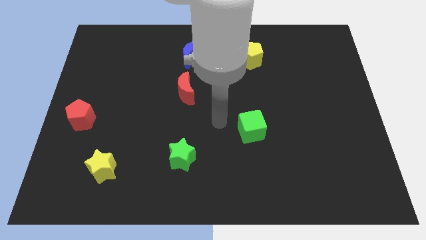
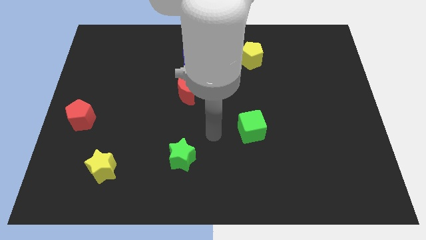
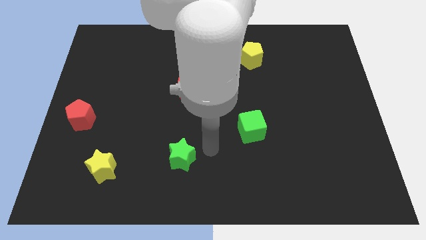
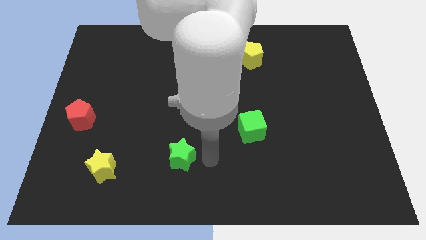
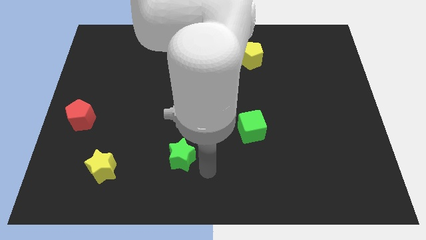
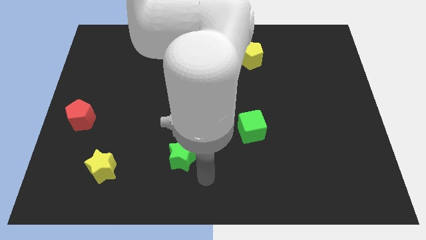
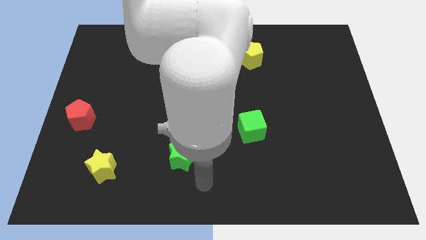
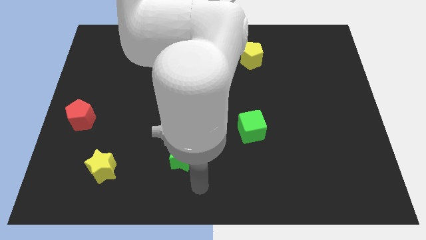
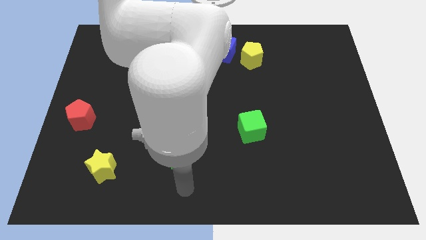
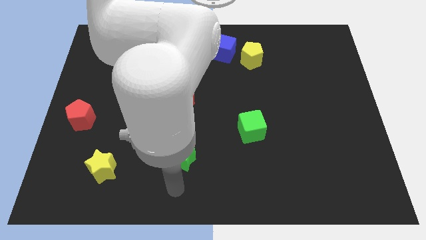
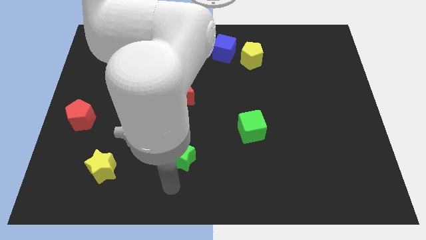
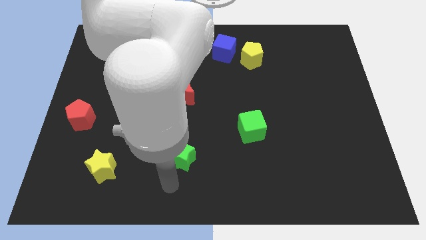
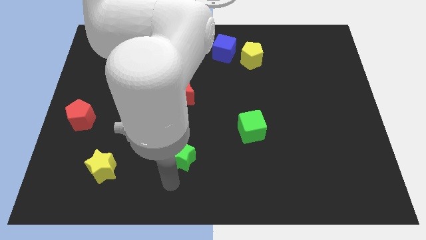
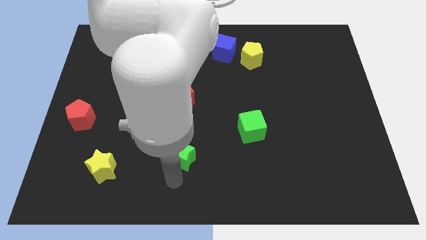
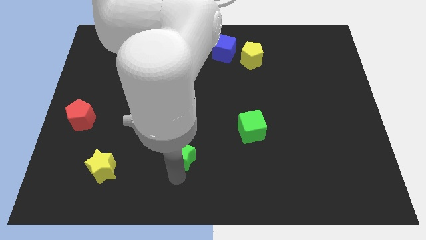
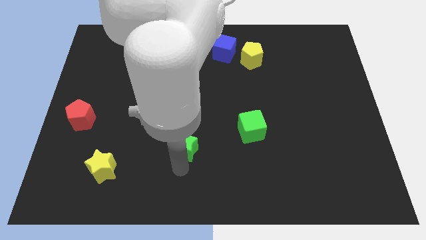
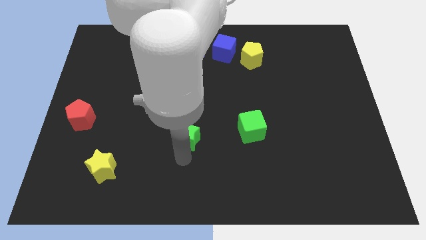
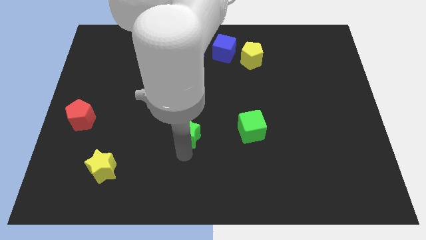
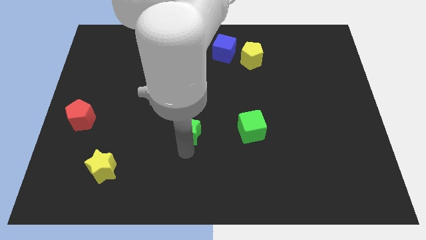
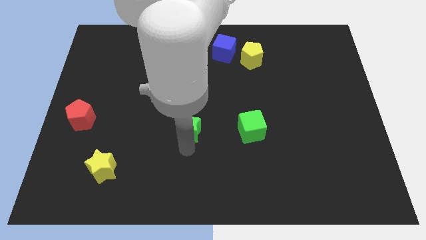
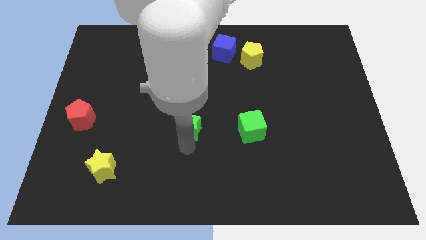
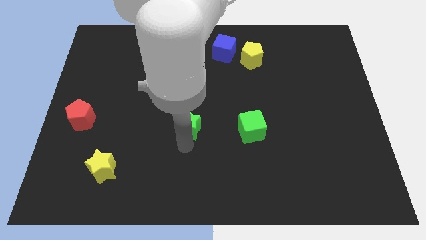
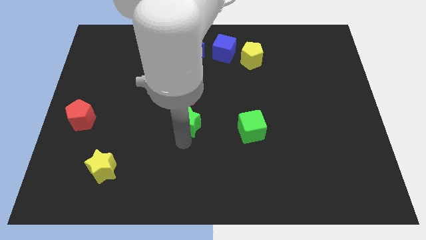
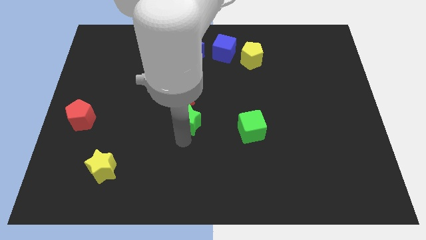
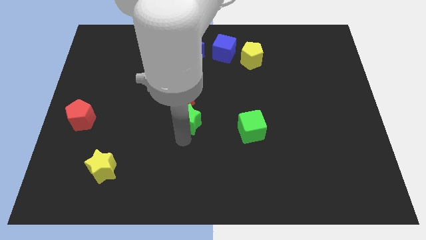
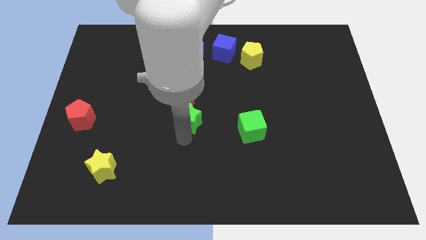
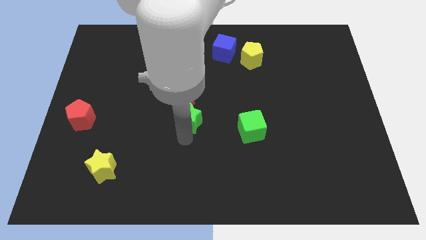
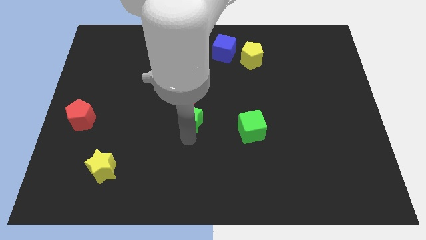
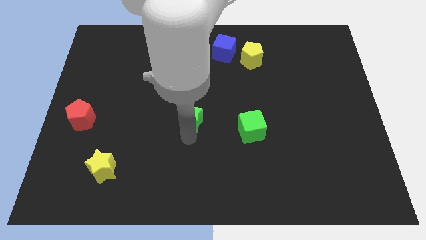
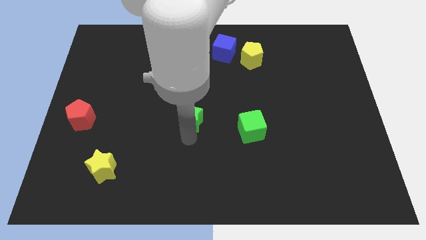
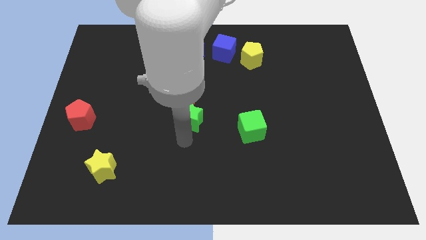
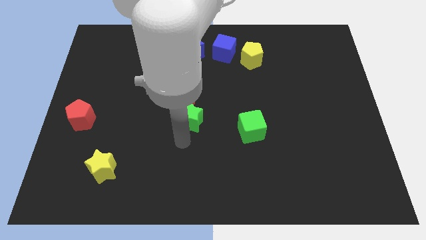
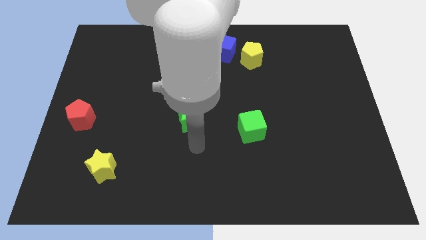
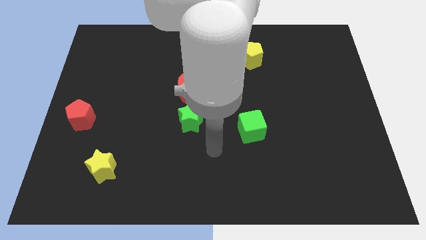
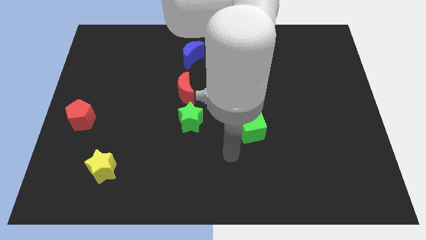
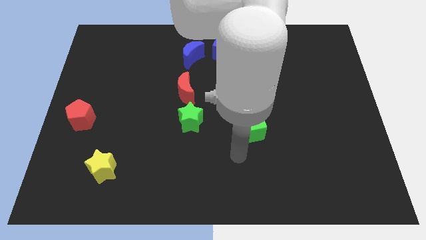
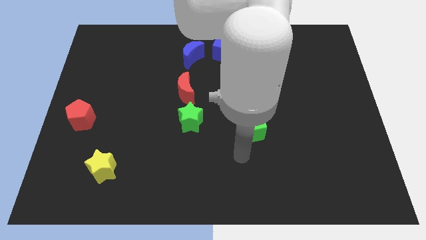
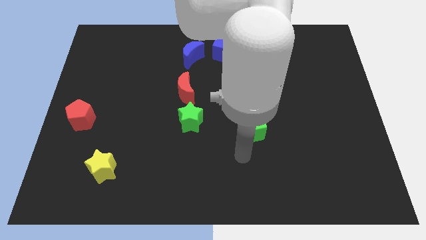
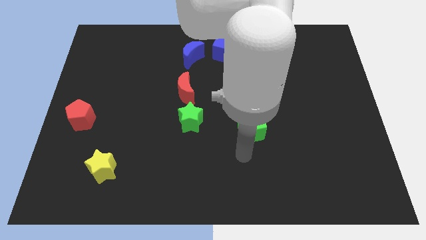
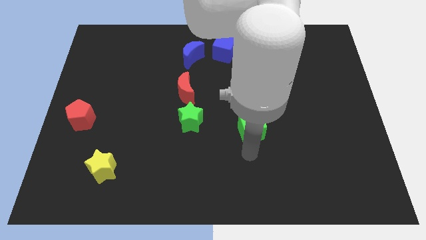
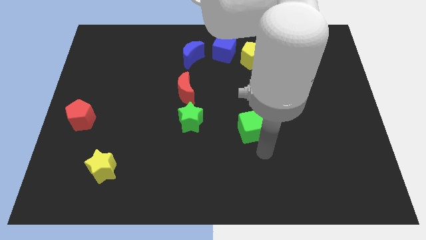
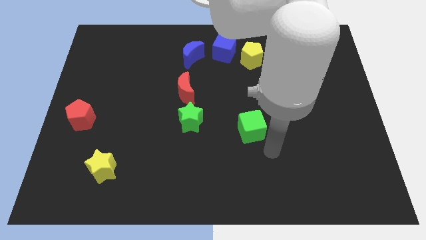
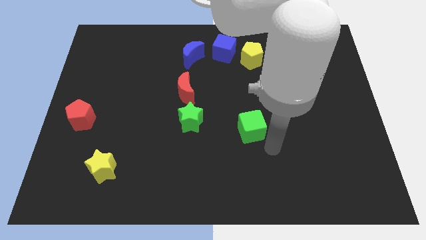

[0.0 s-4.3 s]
place the green star below the red crescent

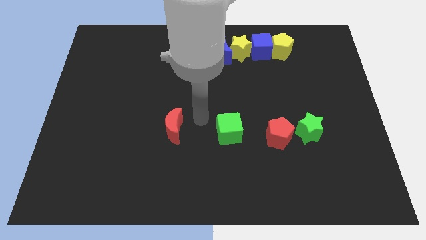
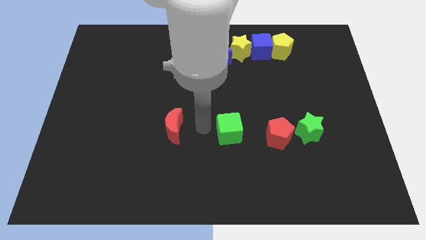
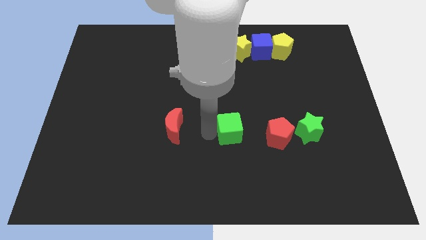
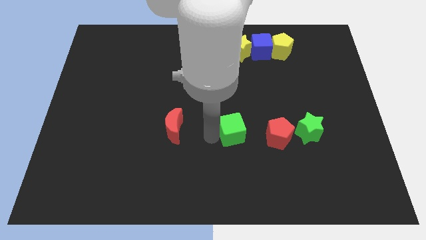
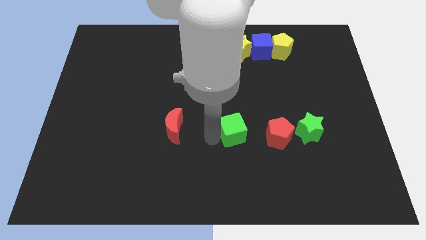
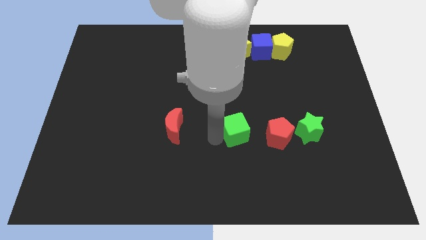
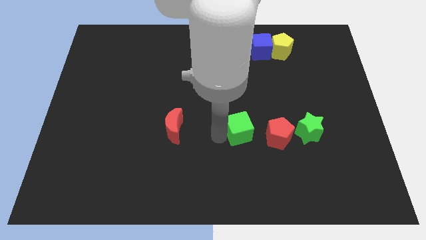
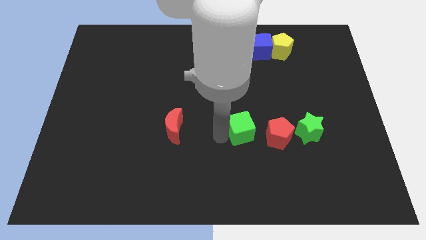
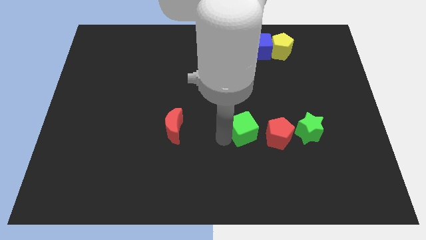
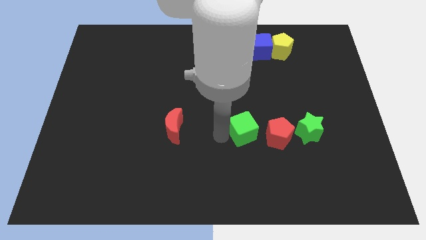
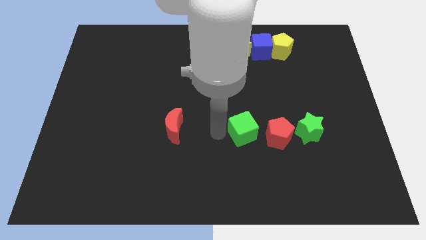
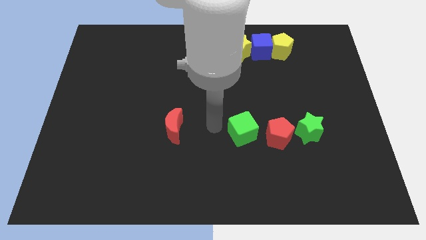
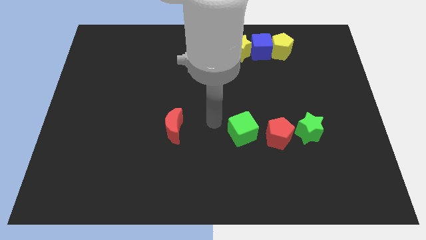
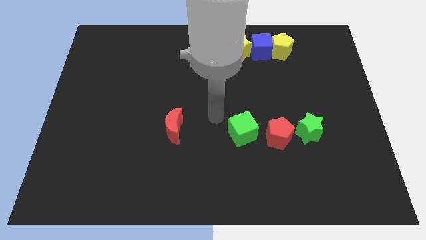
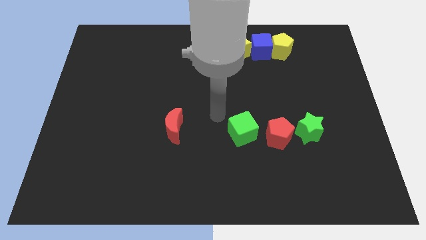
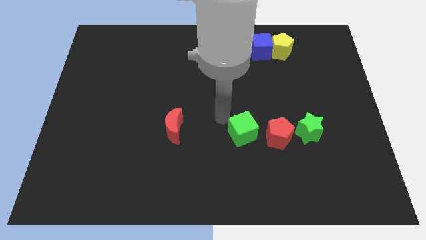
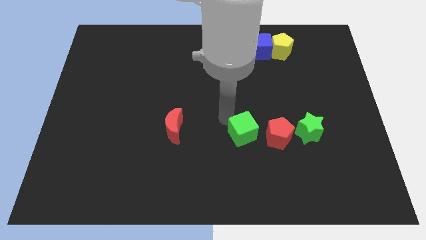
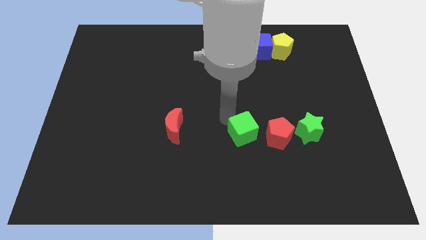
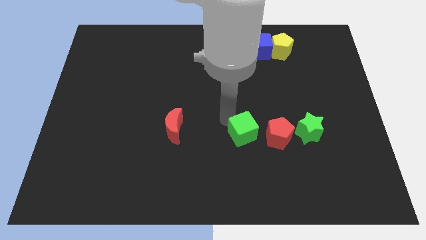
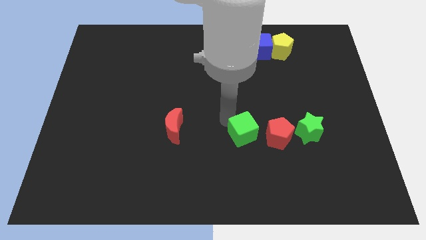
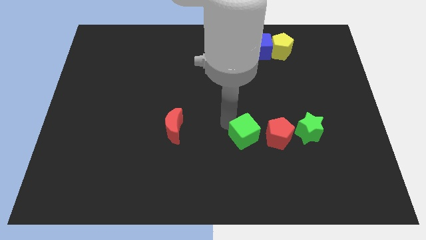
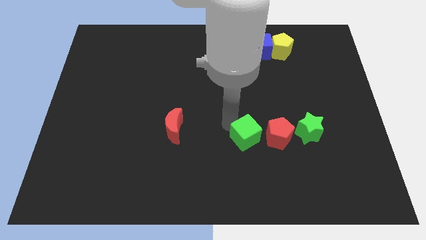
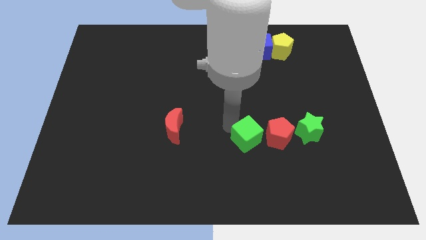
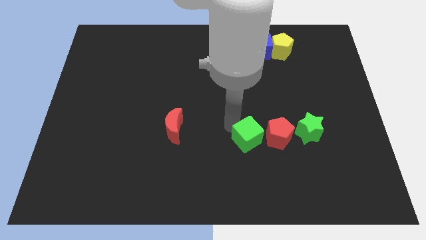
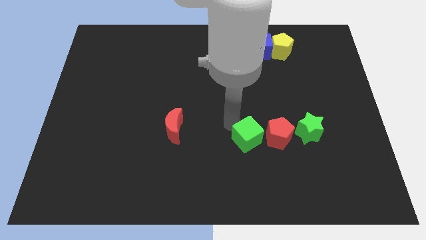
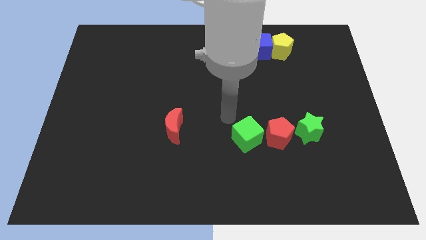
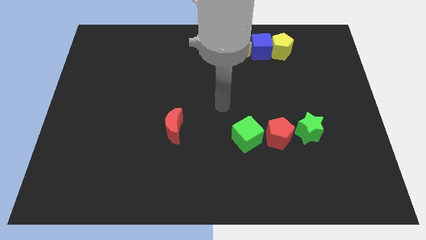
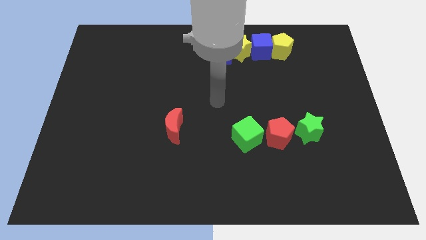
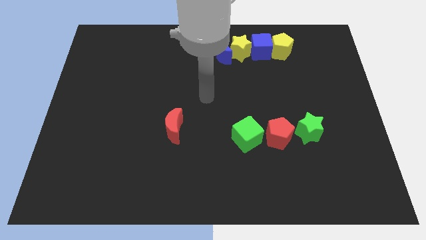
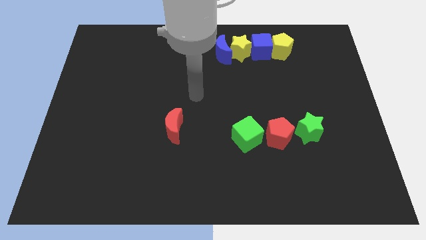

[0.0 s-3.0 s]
place the green cube left to the red pentagon

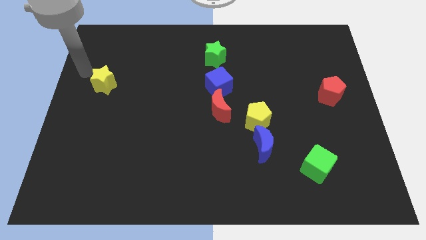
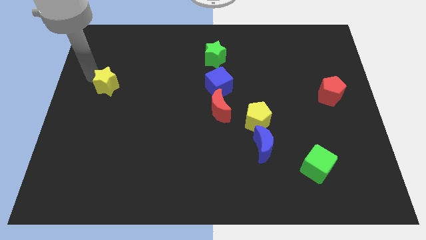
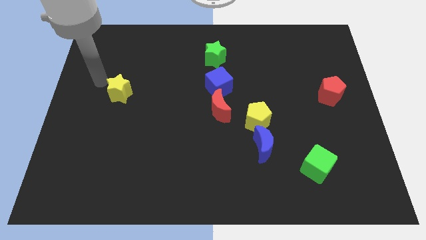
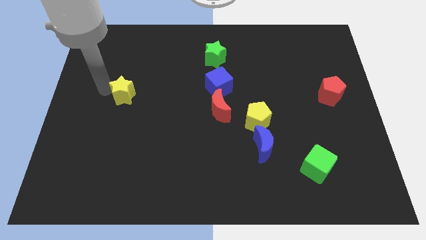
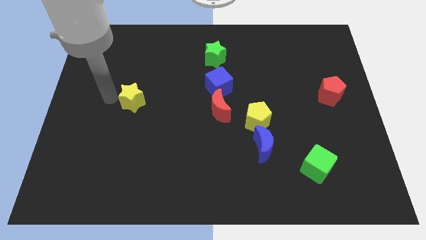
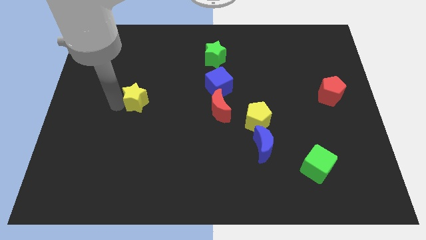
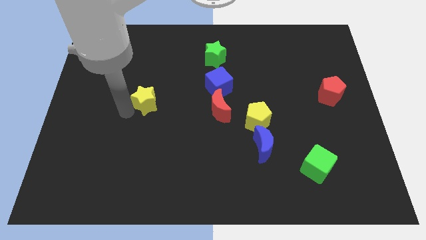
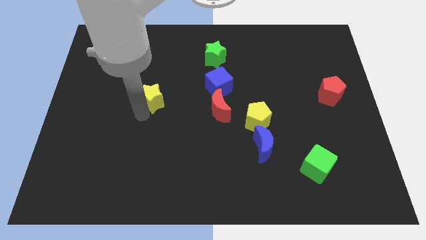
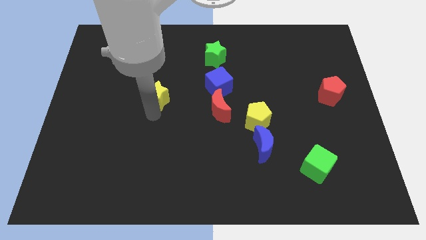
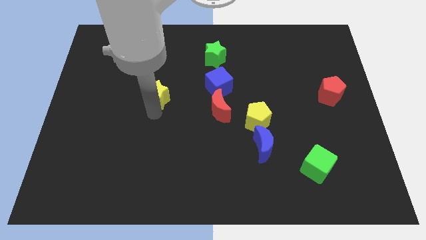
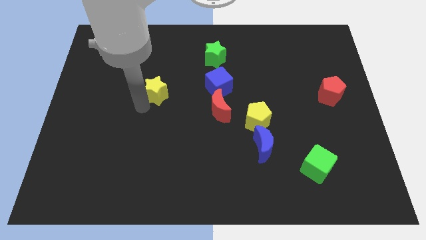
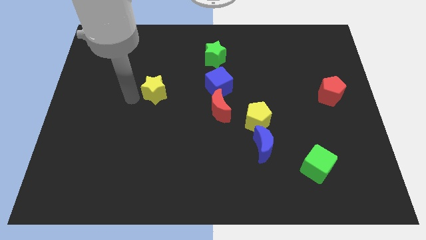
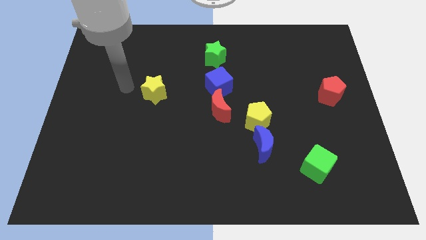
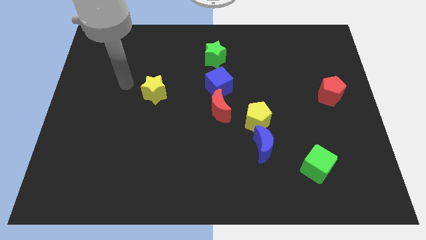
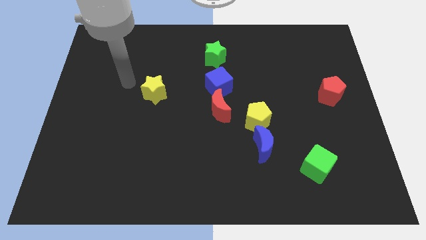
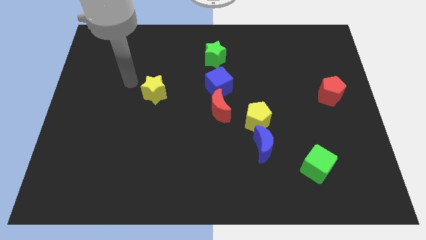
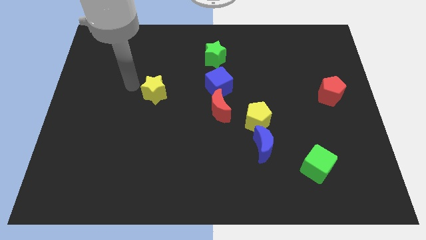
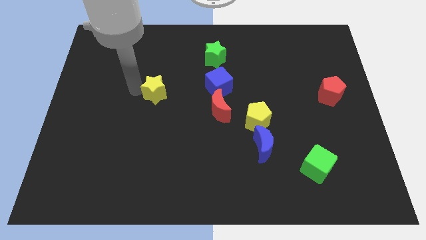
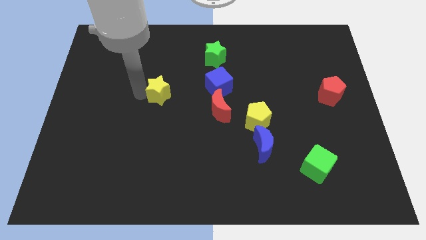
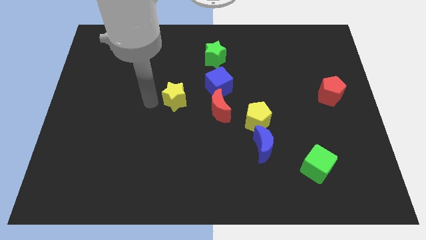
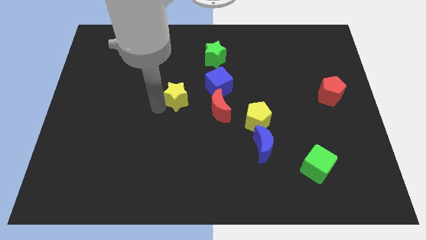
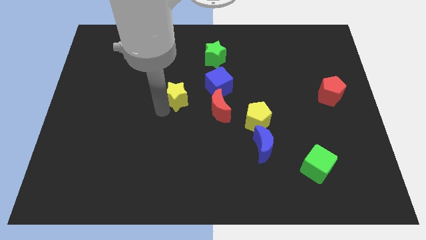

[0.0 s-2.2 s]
move the yellow star to the right of the board
